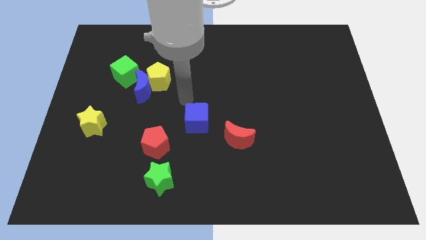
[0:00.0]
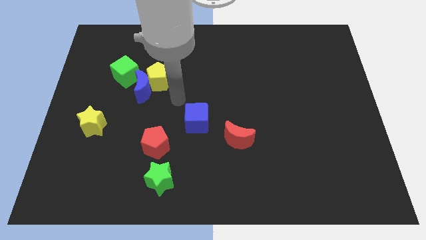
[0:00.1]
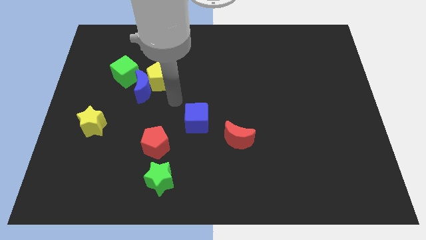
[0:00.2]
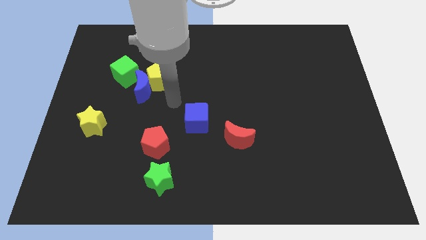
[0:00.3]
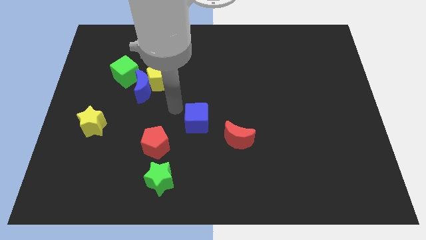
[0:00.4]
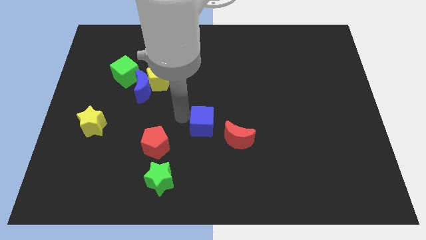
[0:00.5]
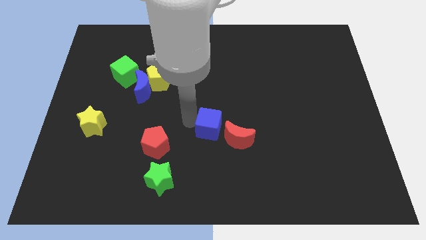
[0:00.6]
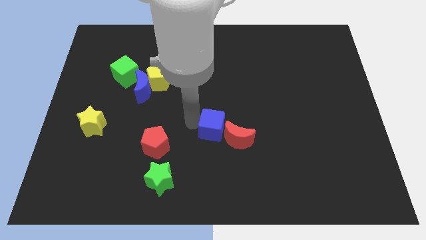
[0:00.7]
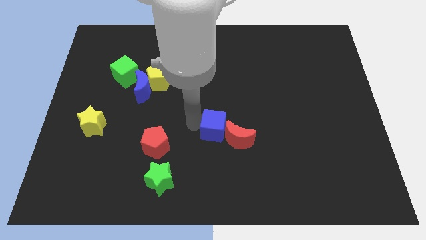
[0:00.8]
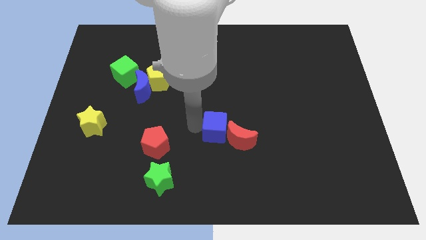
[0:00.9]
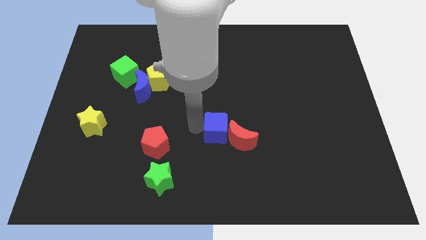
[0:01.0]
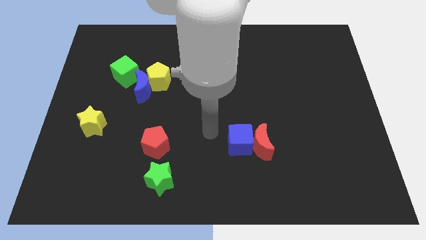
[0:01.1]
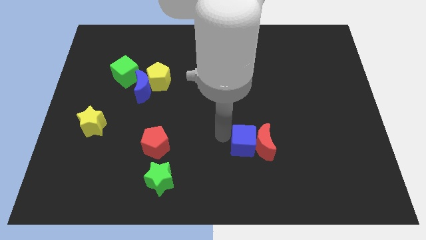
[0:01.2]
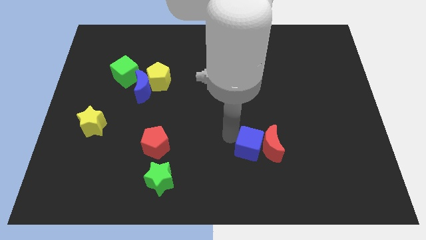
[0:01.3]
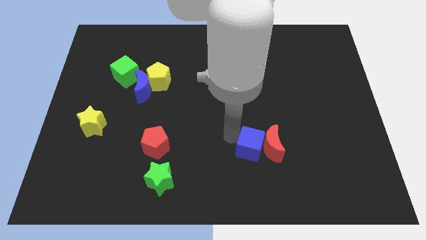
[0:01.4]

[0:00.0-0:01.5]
push red crescent with blue cube to the right of the board

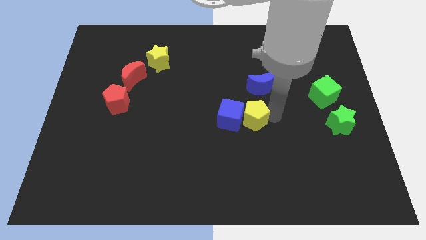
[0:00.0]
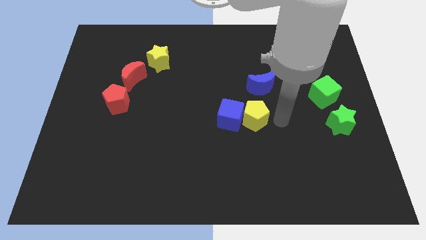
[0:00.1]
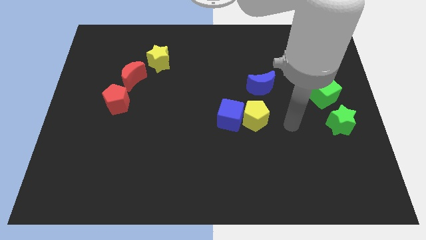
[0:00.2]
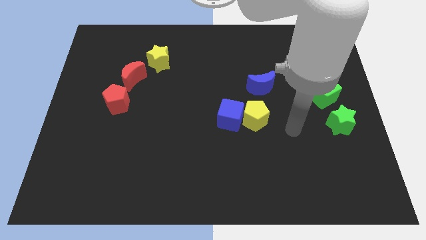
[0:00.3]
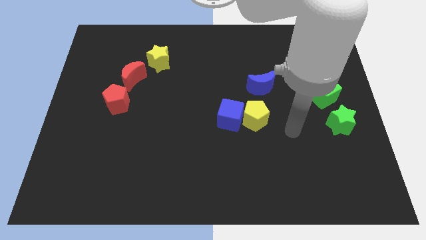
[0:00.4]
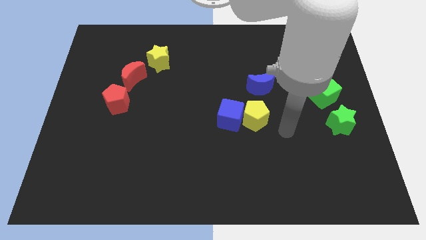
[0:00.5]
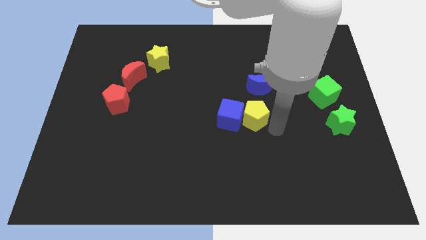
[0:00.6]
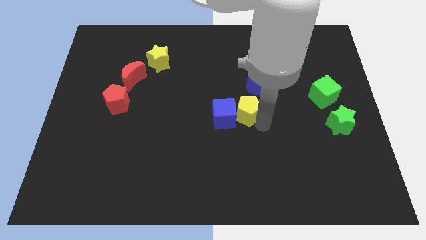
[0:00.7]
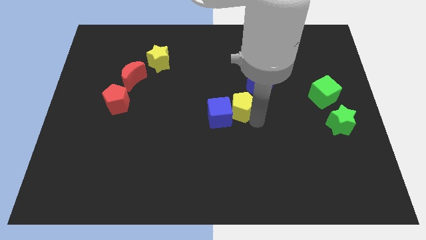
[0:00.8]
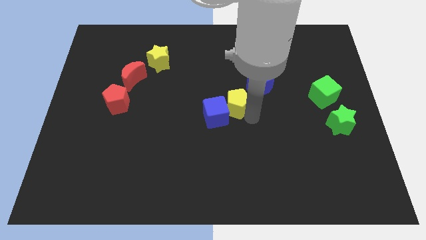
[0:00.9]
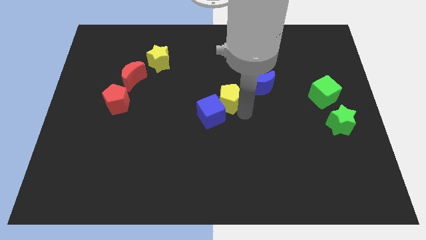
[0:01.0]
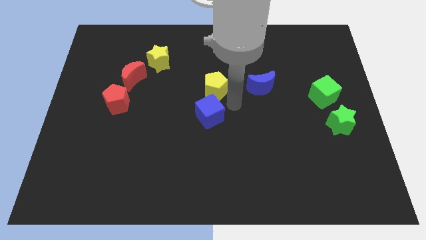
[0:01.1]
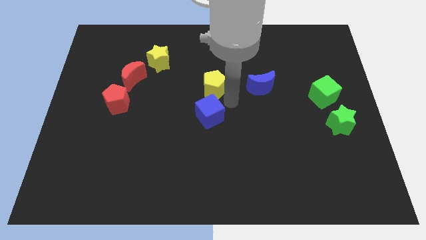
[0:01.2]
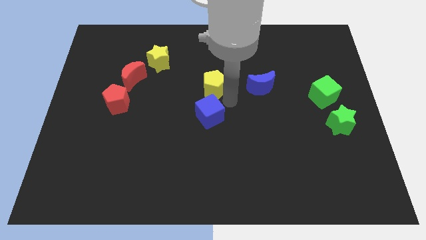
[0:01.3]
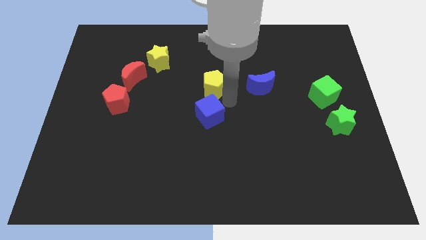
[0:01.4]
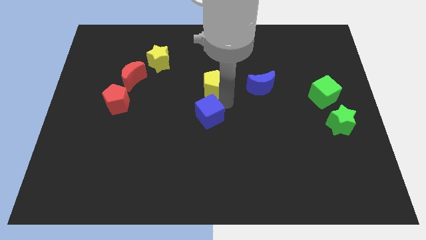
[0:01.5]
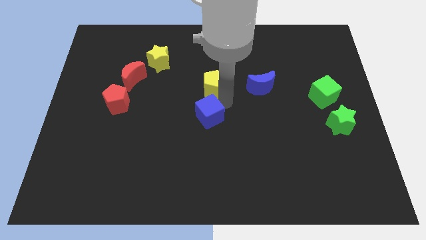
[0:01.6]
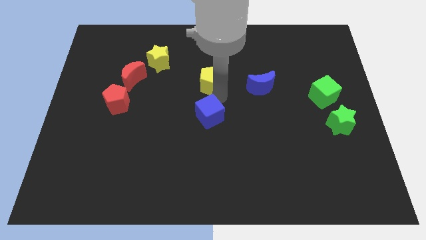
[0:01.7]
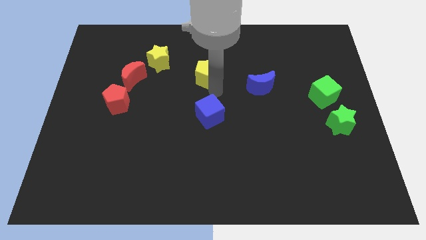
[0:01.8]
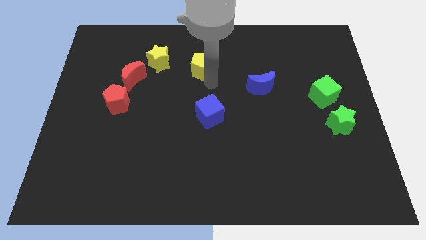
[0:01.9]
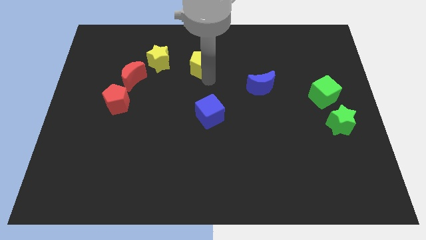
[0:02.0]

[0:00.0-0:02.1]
place yellow pentagon above to the blue cube

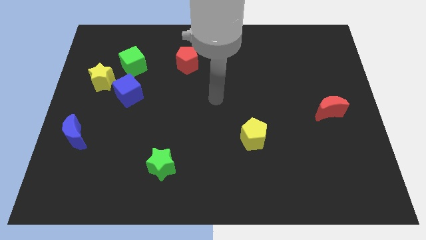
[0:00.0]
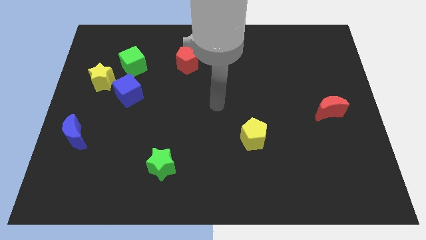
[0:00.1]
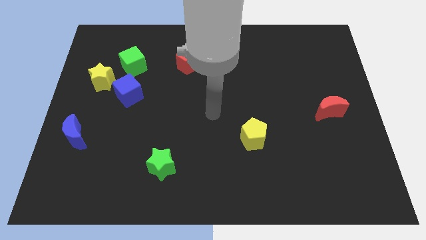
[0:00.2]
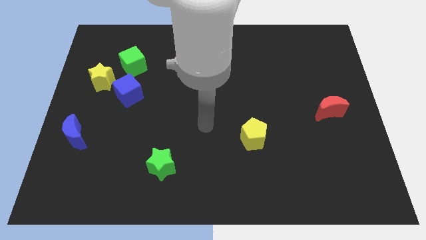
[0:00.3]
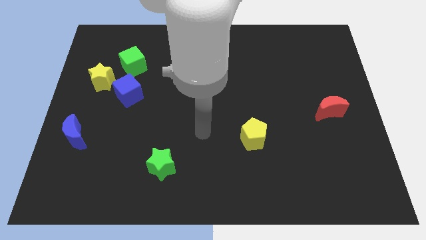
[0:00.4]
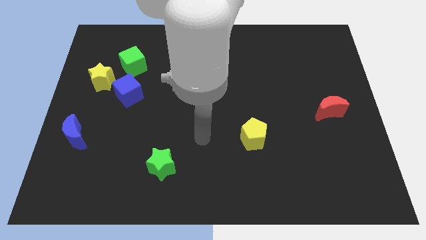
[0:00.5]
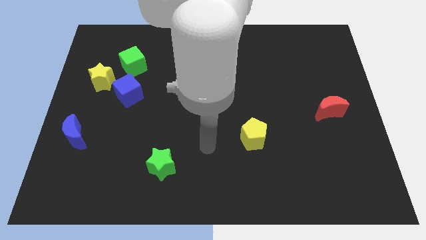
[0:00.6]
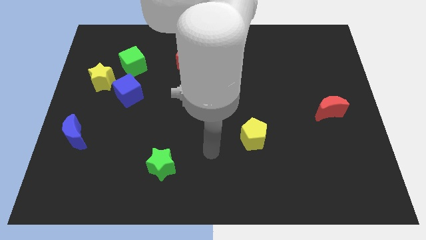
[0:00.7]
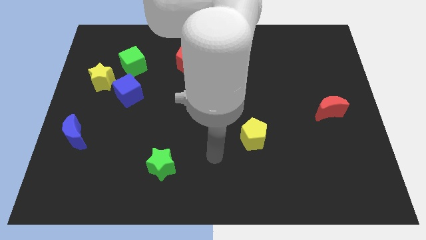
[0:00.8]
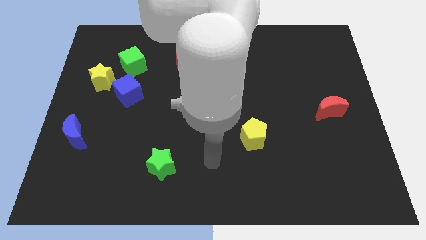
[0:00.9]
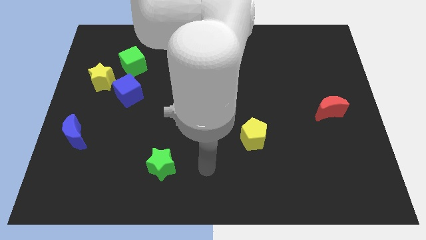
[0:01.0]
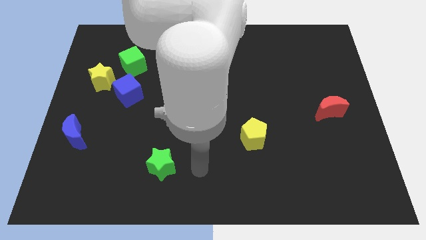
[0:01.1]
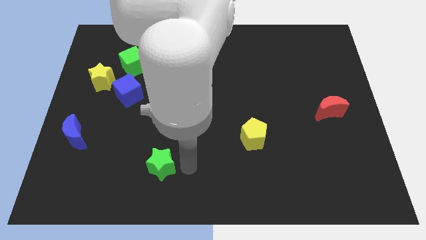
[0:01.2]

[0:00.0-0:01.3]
move the arm to the right of the green star

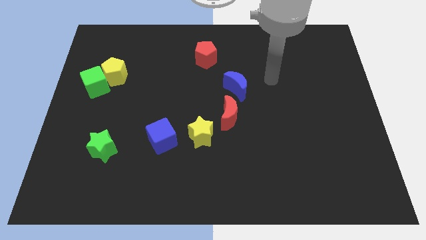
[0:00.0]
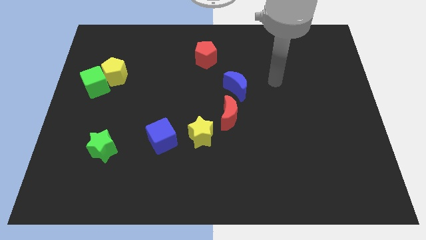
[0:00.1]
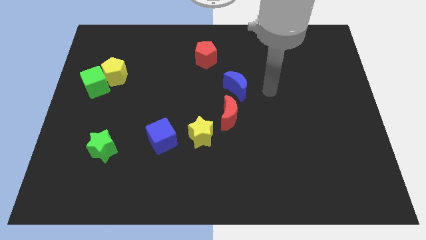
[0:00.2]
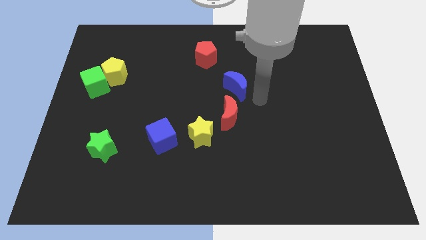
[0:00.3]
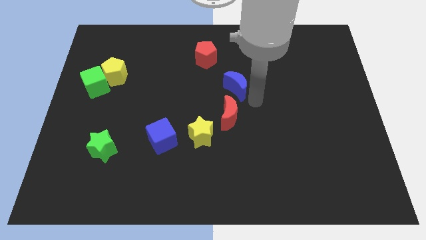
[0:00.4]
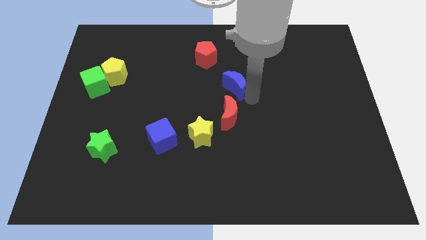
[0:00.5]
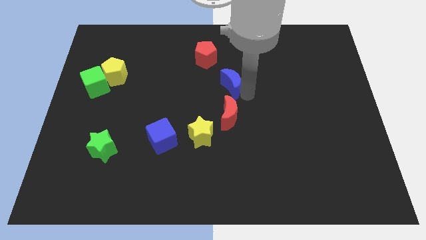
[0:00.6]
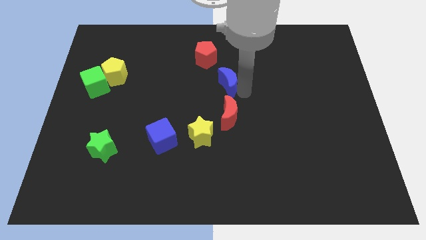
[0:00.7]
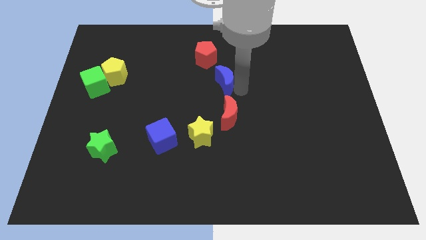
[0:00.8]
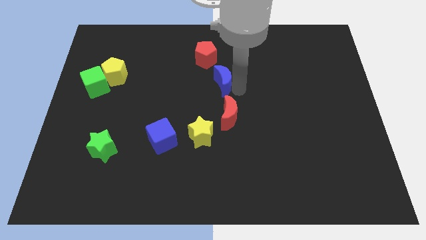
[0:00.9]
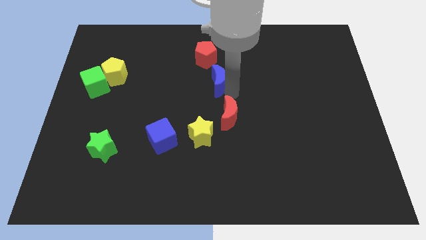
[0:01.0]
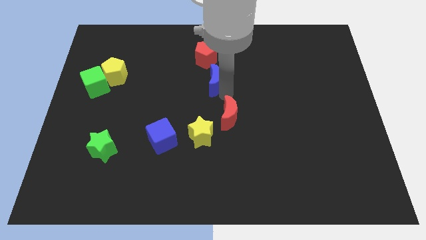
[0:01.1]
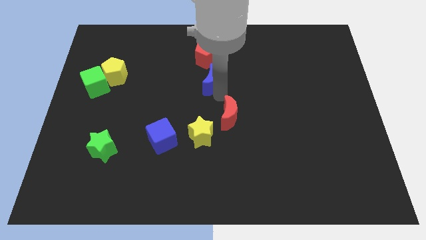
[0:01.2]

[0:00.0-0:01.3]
place the blue moon in between the red blocks

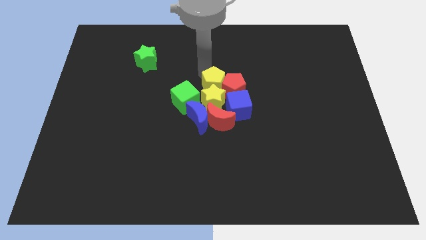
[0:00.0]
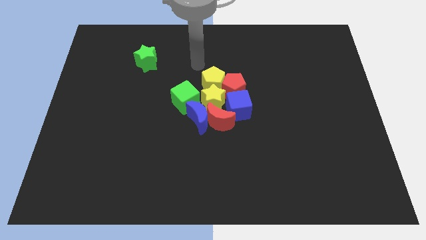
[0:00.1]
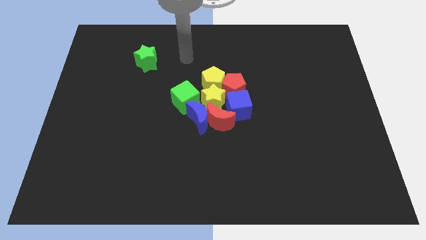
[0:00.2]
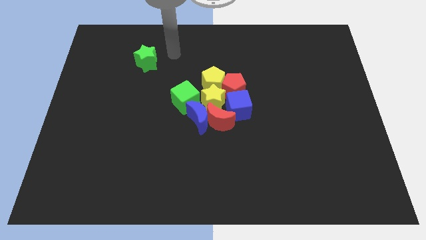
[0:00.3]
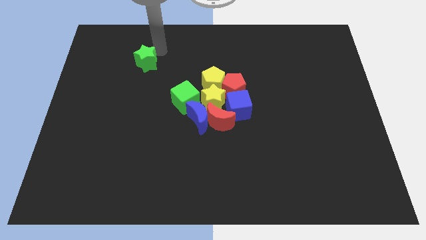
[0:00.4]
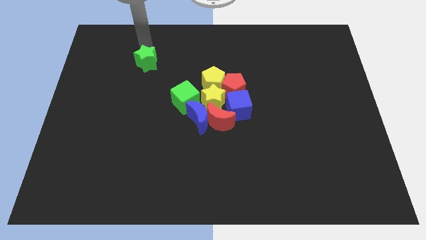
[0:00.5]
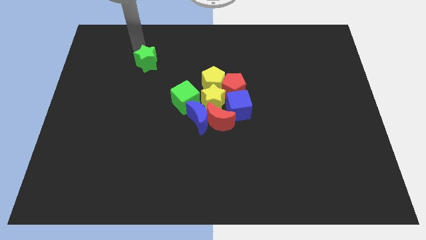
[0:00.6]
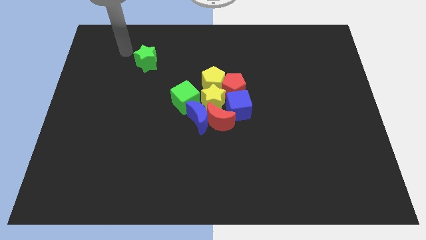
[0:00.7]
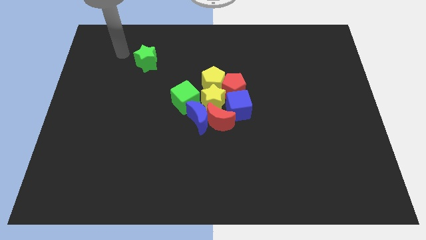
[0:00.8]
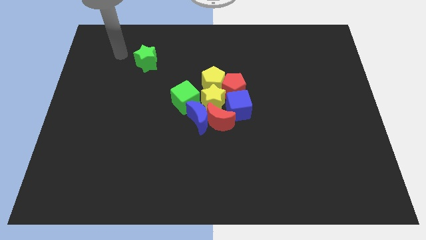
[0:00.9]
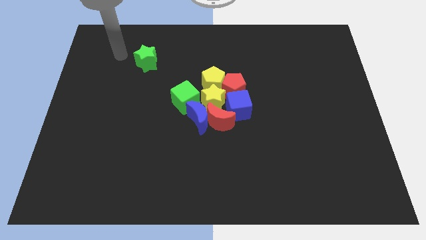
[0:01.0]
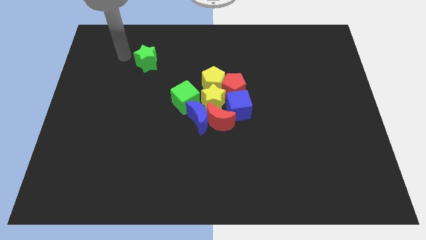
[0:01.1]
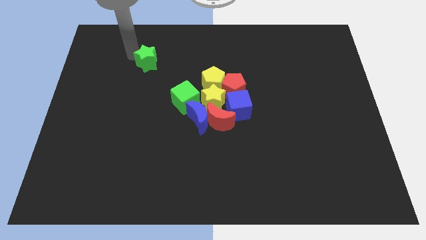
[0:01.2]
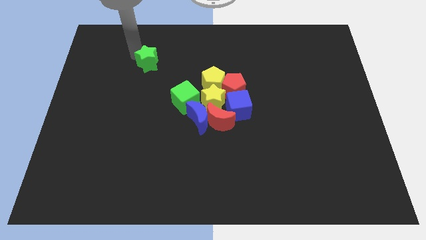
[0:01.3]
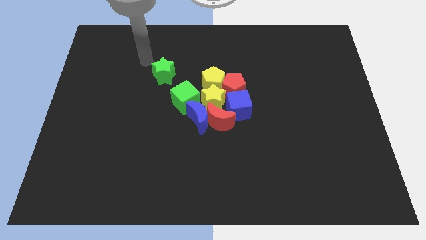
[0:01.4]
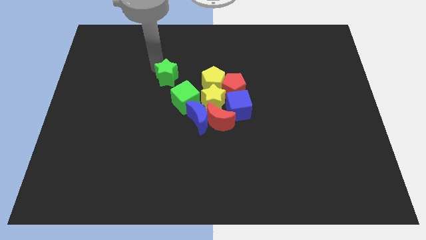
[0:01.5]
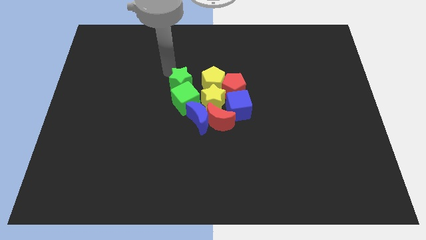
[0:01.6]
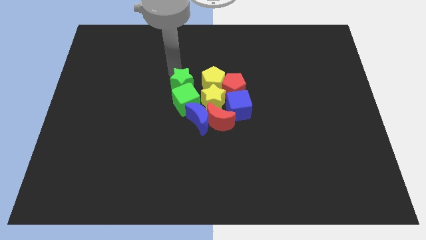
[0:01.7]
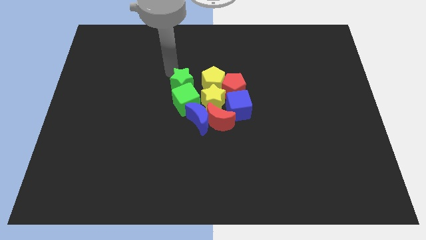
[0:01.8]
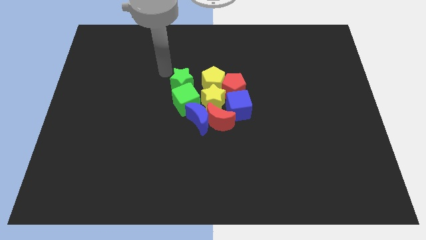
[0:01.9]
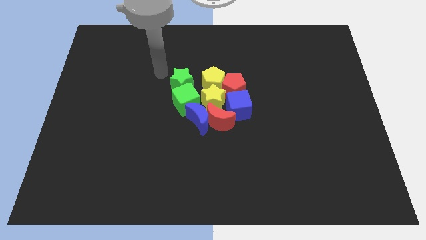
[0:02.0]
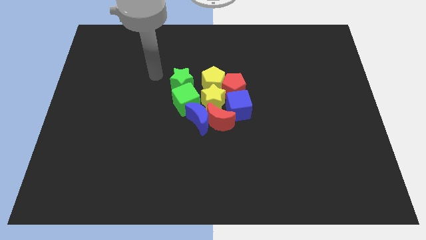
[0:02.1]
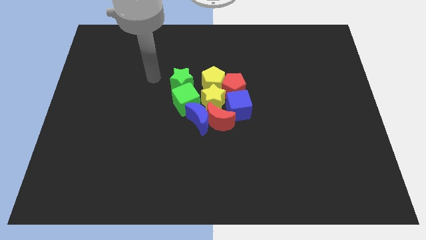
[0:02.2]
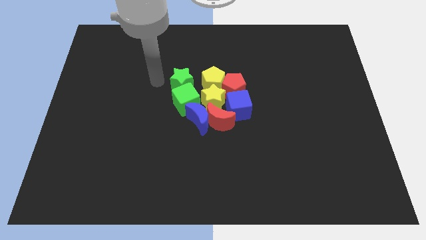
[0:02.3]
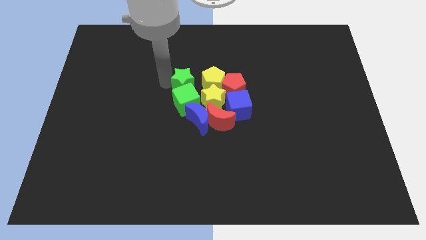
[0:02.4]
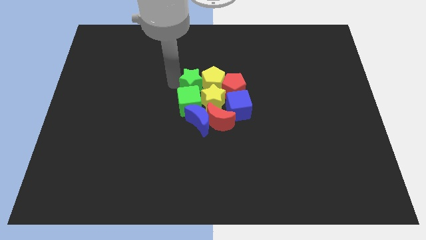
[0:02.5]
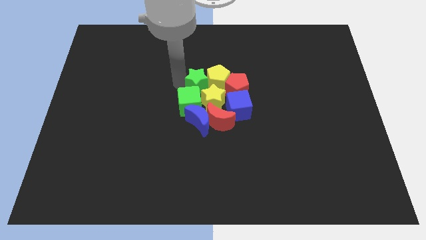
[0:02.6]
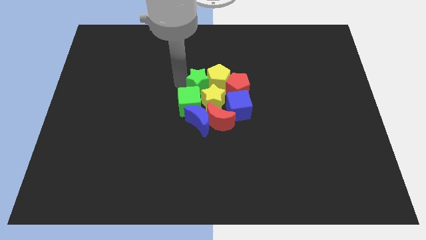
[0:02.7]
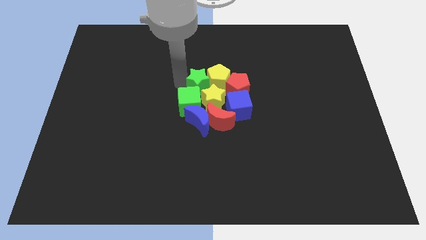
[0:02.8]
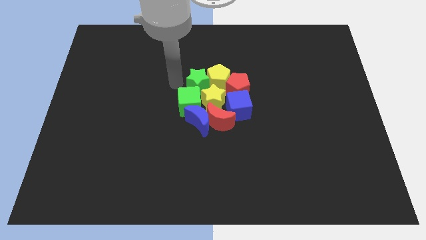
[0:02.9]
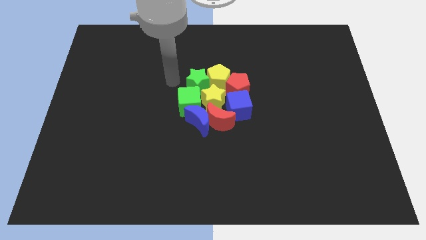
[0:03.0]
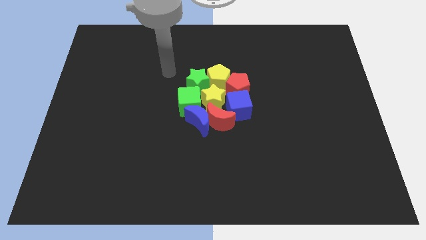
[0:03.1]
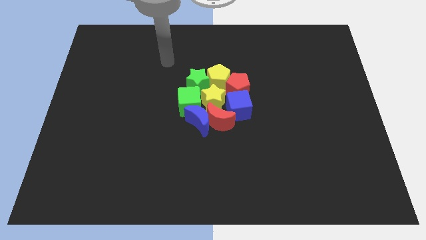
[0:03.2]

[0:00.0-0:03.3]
move the green star to the left of yellow pentagon
